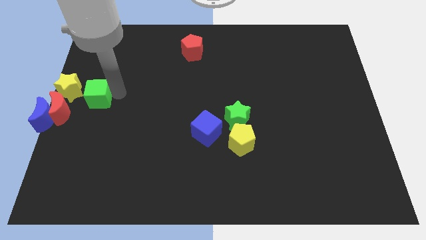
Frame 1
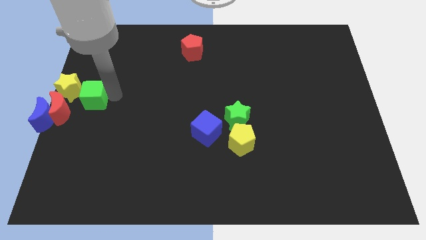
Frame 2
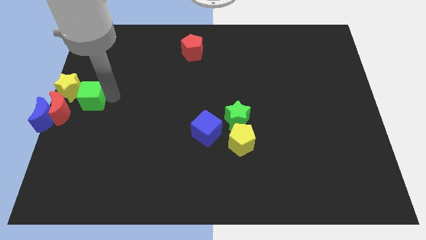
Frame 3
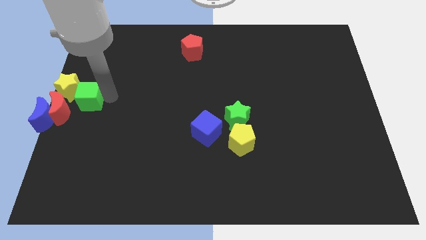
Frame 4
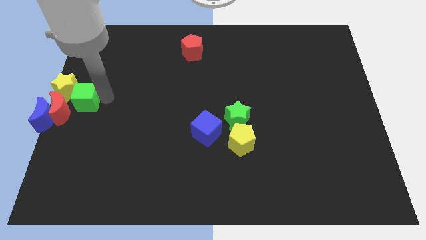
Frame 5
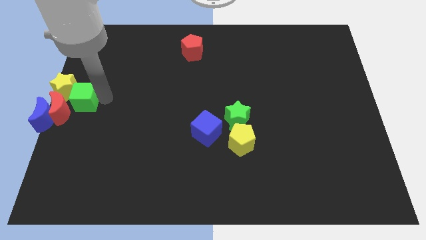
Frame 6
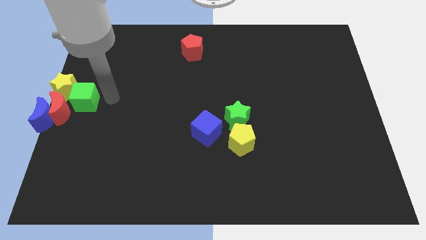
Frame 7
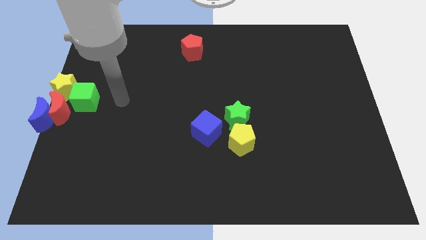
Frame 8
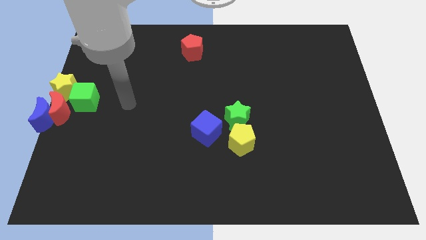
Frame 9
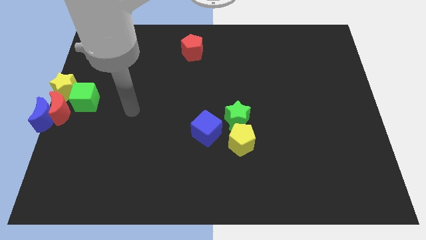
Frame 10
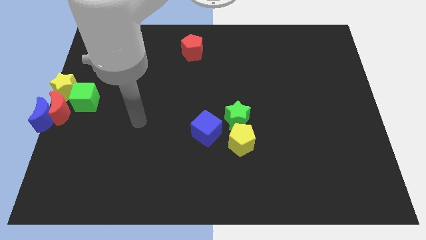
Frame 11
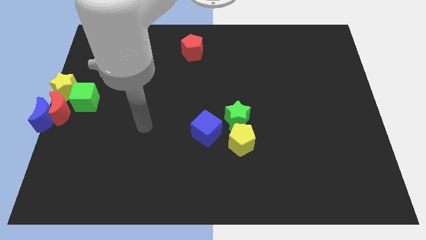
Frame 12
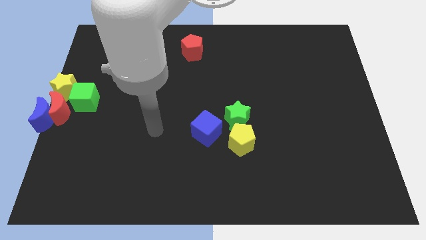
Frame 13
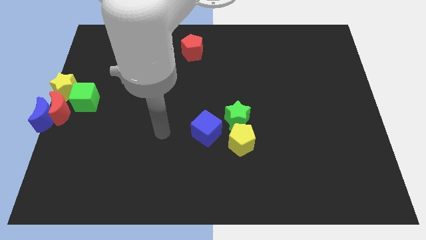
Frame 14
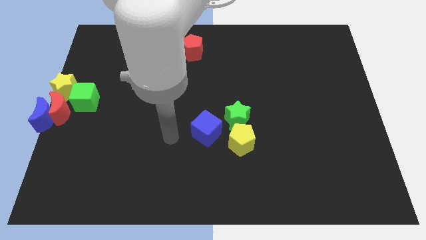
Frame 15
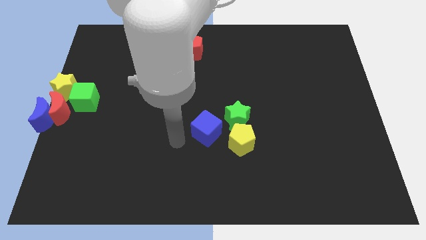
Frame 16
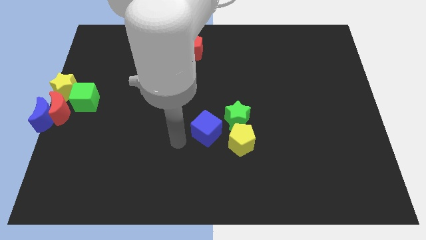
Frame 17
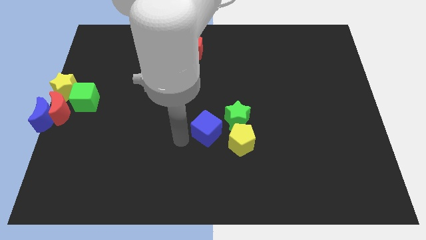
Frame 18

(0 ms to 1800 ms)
push the green cube into the yellow star

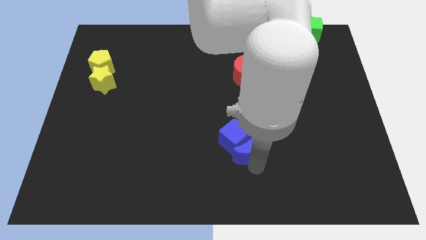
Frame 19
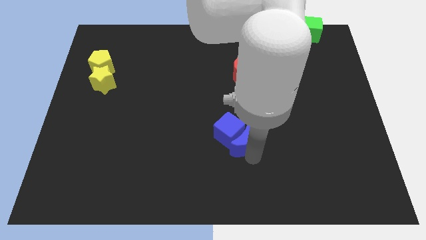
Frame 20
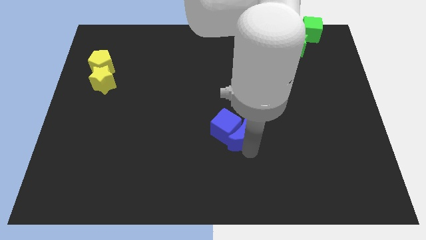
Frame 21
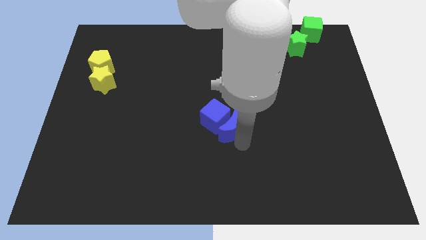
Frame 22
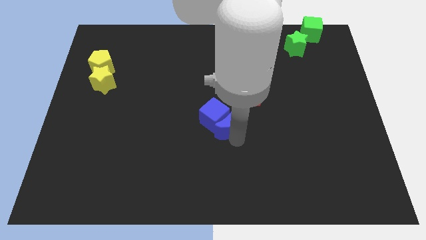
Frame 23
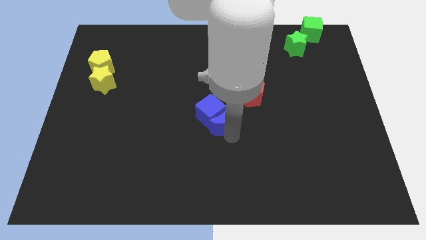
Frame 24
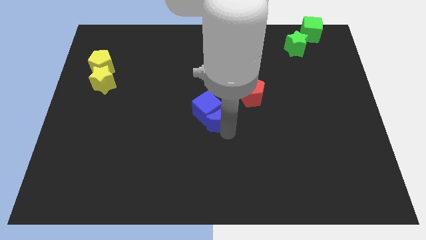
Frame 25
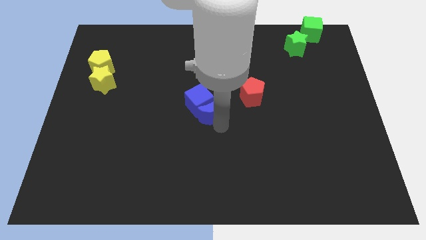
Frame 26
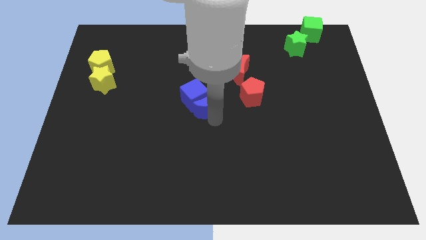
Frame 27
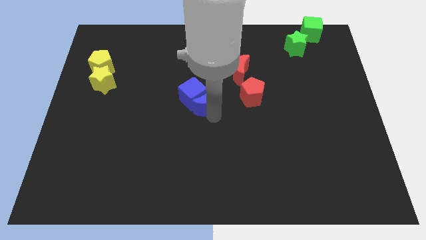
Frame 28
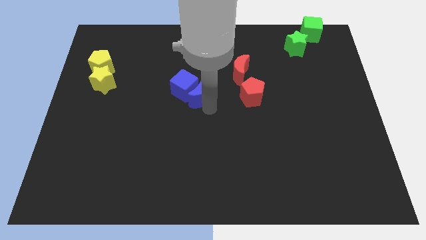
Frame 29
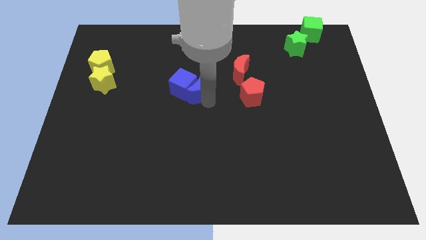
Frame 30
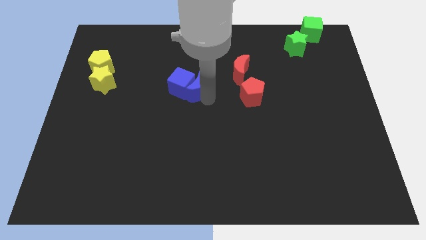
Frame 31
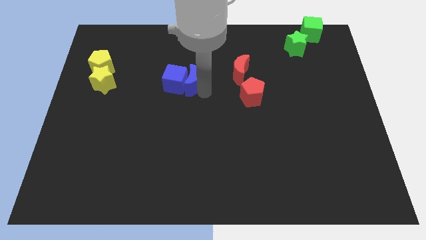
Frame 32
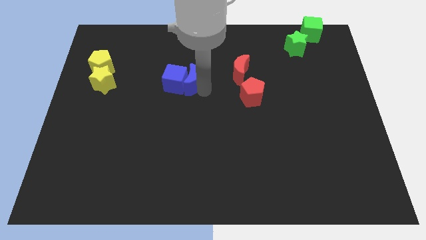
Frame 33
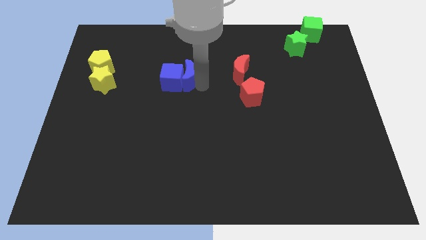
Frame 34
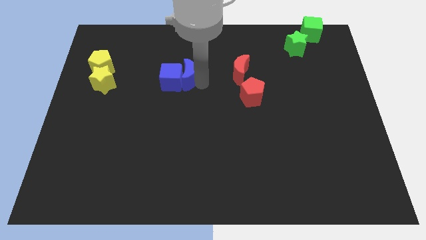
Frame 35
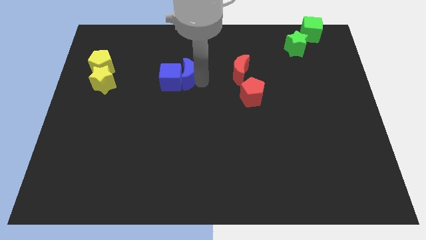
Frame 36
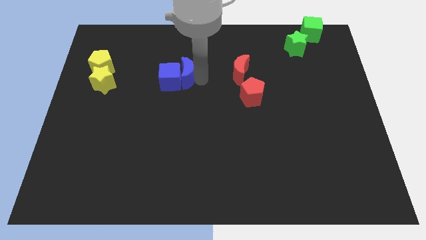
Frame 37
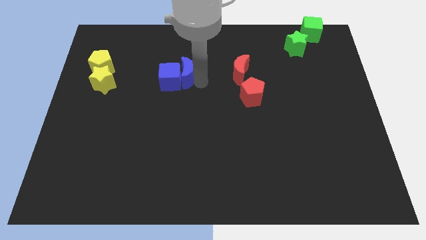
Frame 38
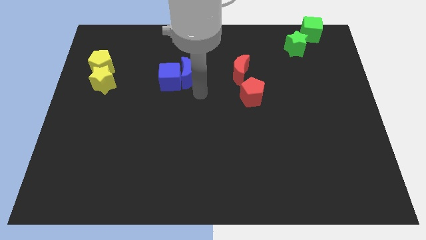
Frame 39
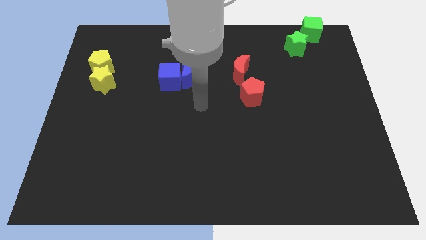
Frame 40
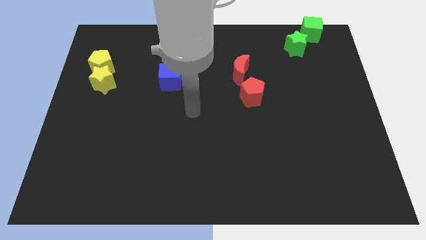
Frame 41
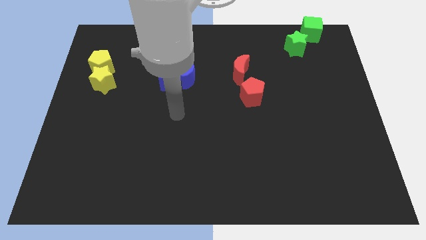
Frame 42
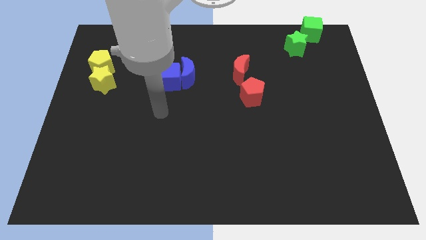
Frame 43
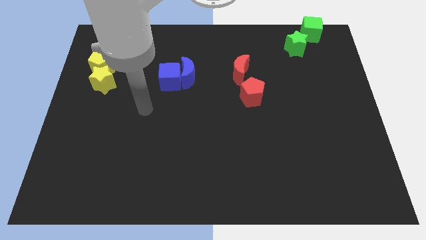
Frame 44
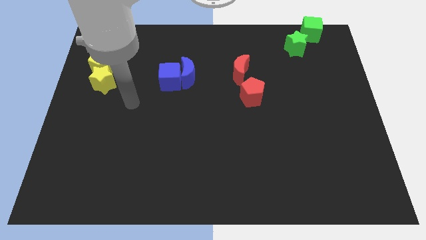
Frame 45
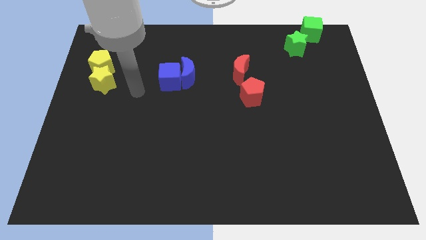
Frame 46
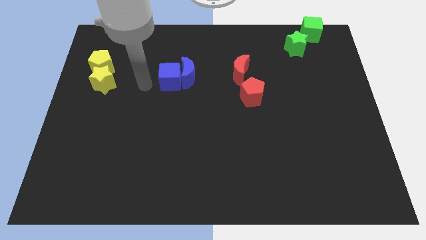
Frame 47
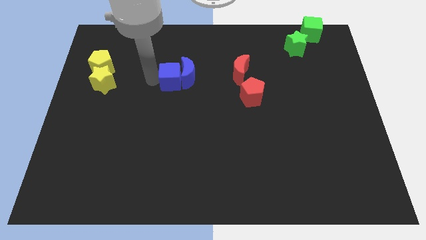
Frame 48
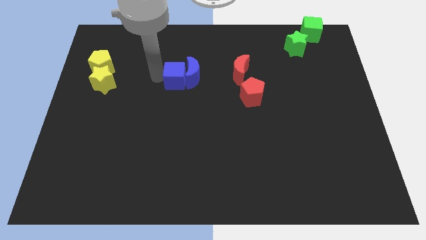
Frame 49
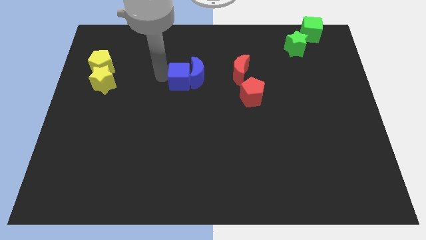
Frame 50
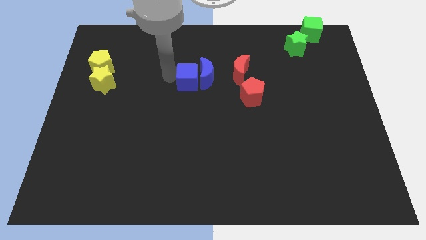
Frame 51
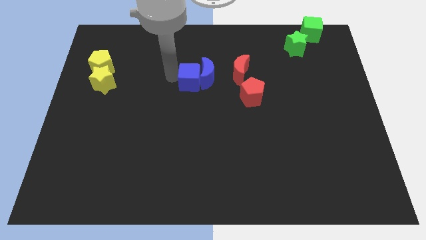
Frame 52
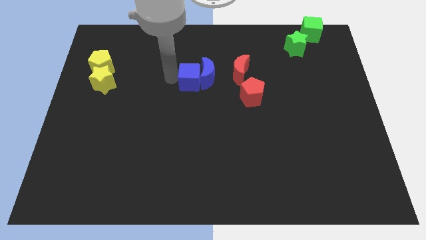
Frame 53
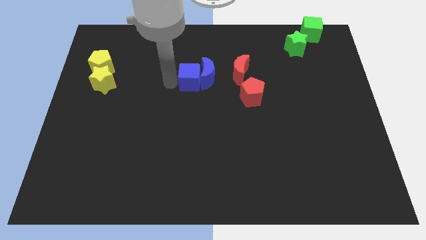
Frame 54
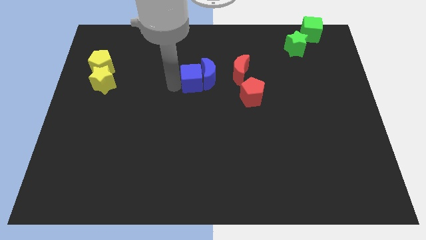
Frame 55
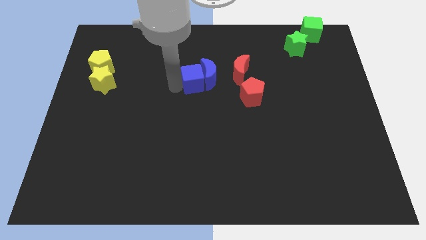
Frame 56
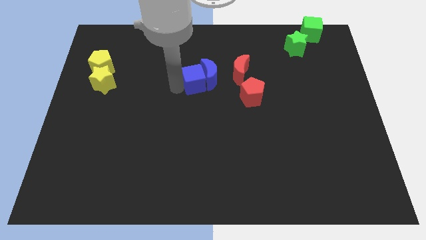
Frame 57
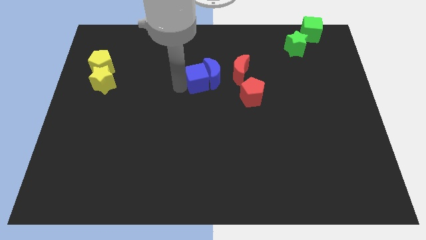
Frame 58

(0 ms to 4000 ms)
push the blue blocks left to the red moon

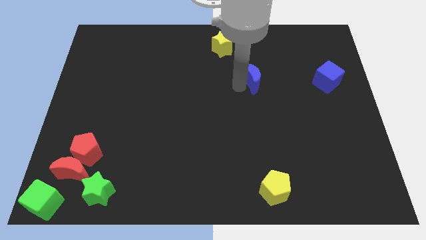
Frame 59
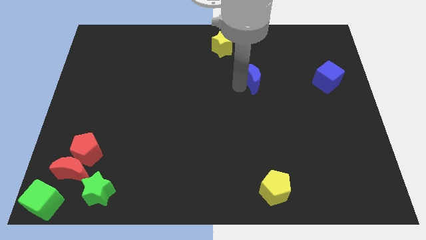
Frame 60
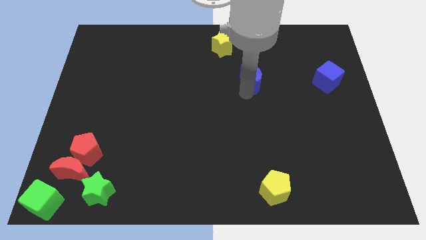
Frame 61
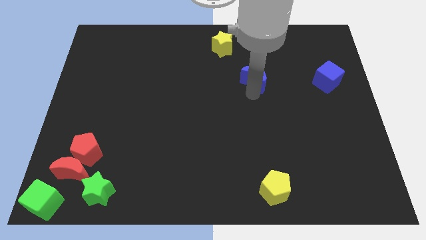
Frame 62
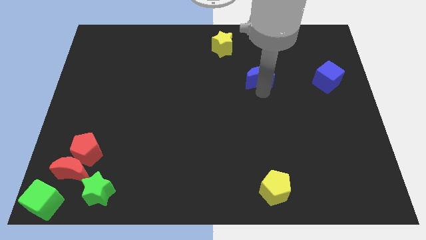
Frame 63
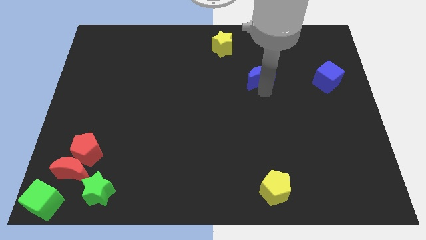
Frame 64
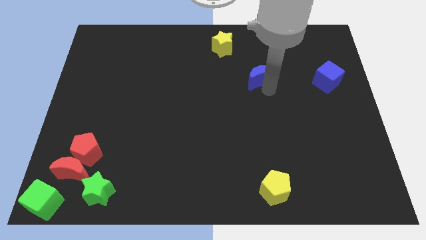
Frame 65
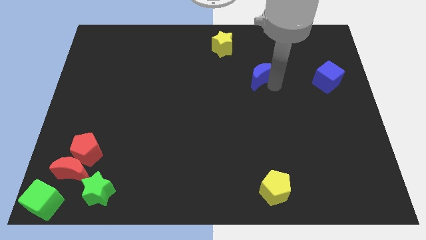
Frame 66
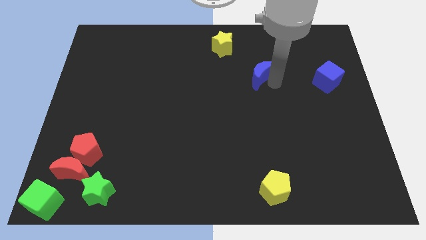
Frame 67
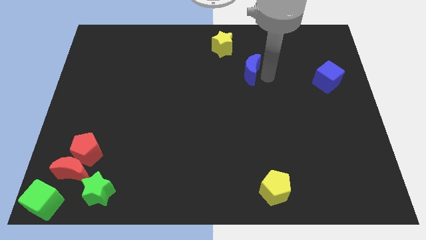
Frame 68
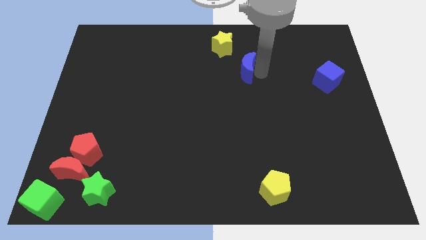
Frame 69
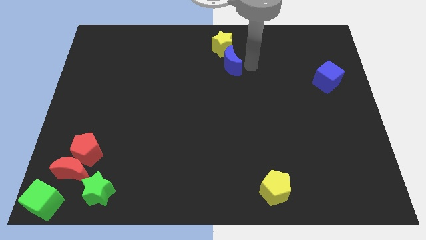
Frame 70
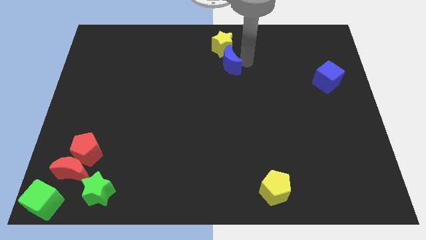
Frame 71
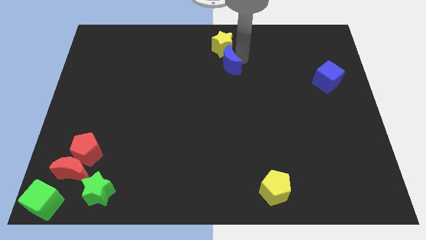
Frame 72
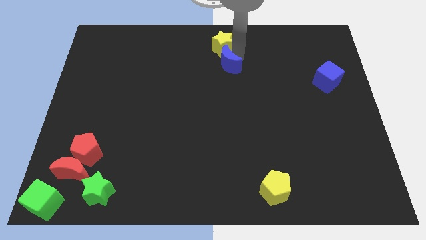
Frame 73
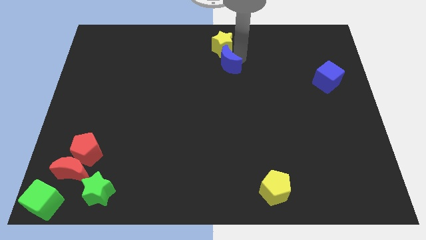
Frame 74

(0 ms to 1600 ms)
put the blue moon and yellow star together

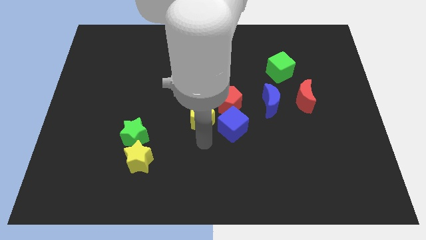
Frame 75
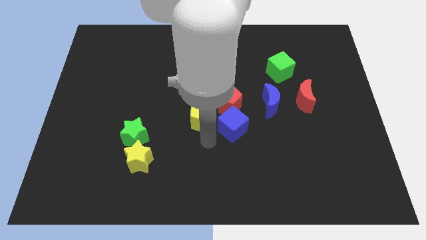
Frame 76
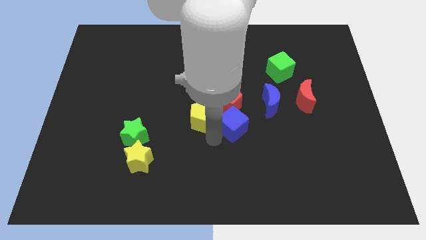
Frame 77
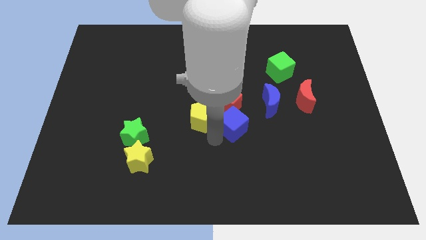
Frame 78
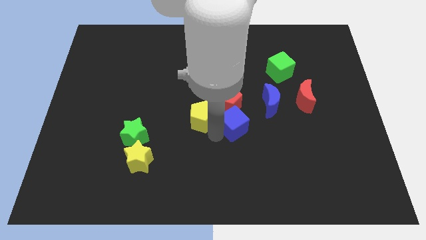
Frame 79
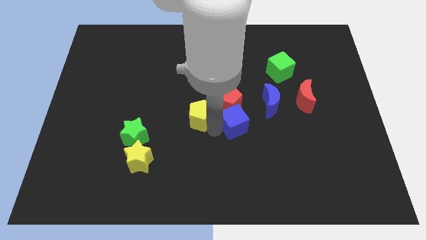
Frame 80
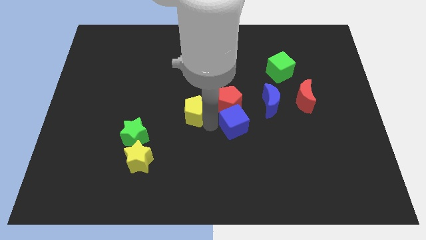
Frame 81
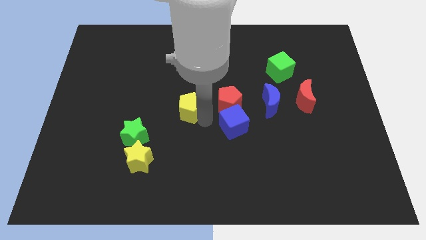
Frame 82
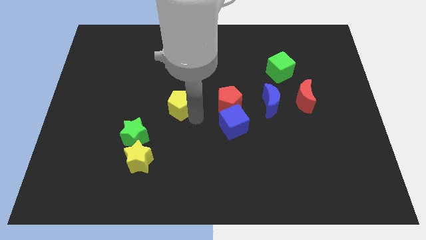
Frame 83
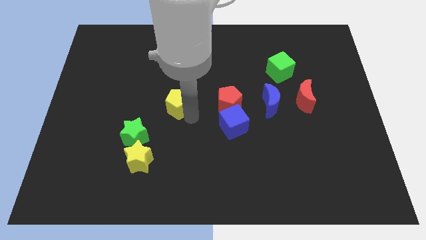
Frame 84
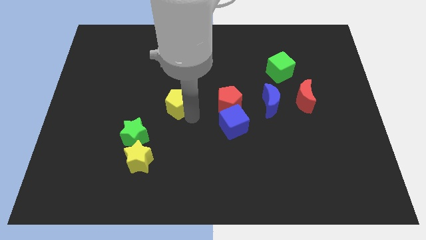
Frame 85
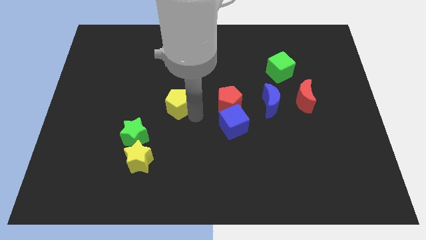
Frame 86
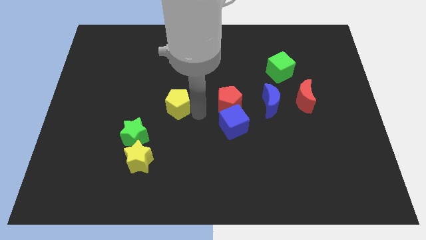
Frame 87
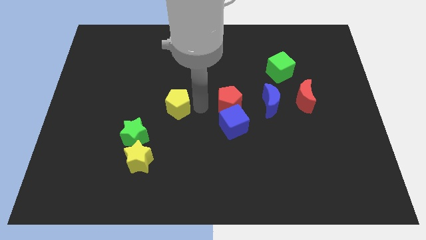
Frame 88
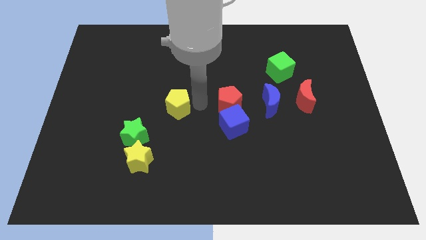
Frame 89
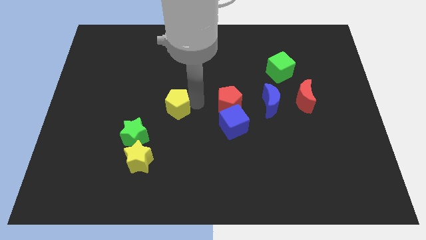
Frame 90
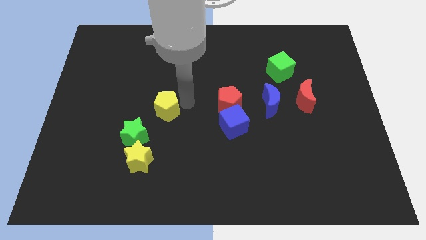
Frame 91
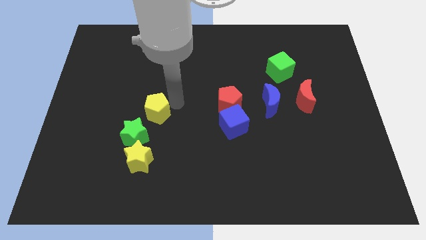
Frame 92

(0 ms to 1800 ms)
put the yellow pentagon parallel left to the red pentagon
